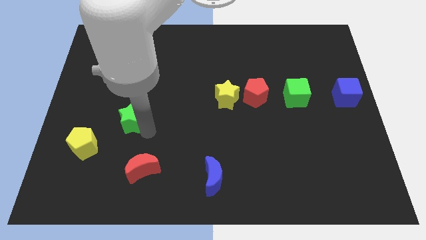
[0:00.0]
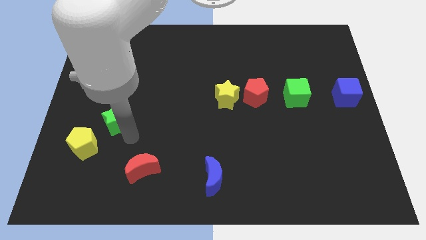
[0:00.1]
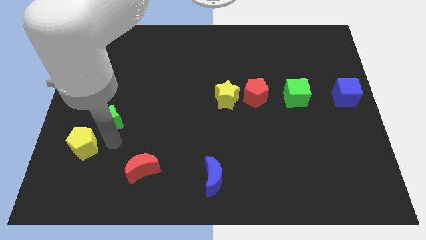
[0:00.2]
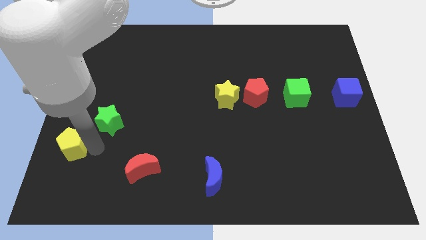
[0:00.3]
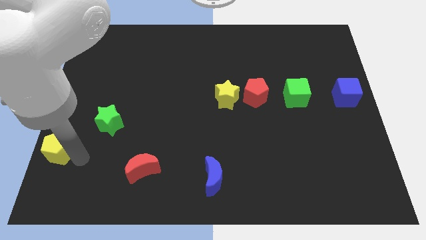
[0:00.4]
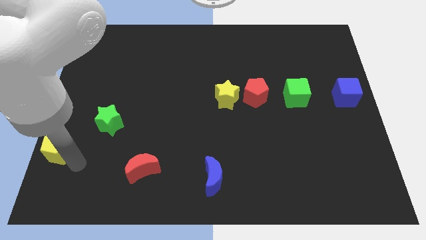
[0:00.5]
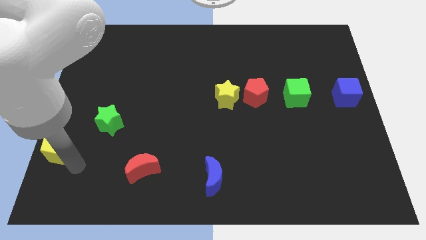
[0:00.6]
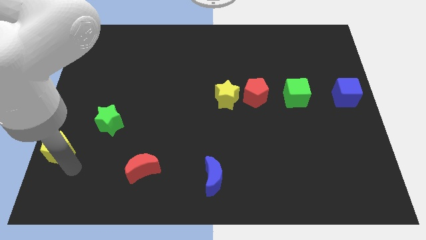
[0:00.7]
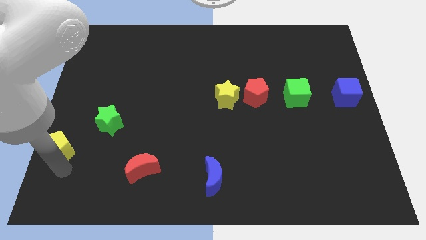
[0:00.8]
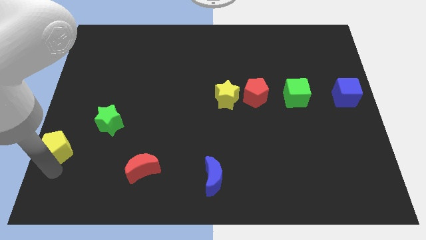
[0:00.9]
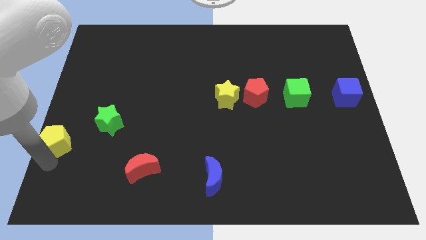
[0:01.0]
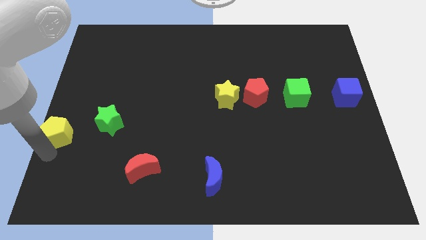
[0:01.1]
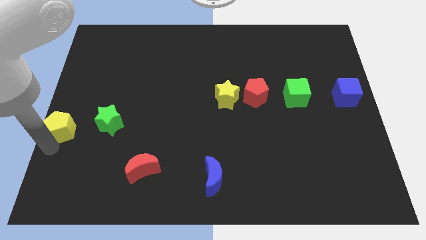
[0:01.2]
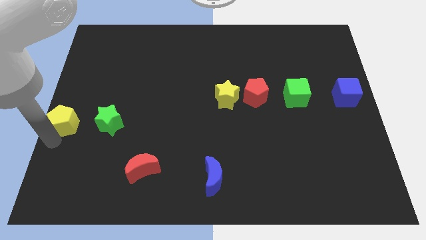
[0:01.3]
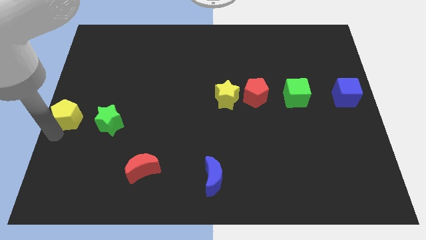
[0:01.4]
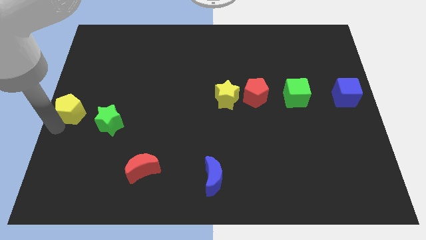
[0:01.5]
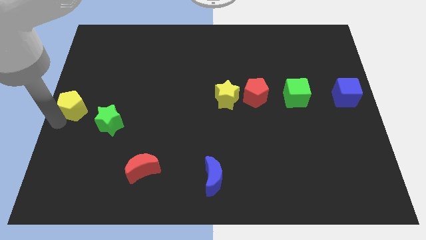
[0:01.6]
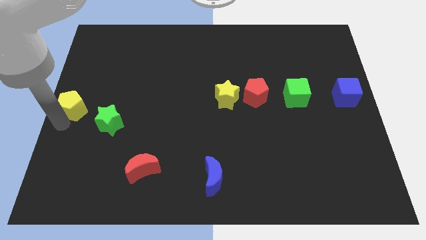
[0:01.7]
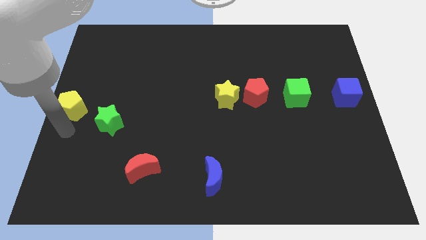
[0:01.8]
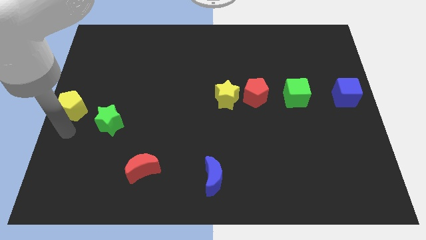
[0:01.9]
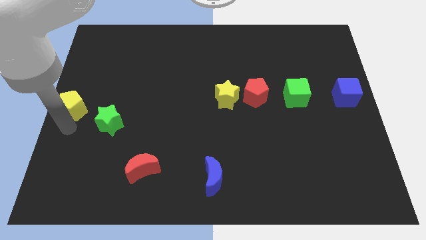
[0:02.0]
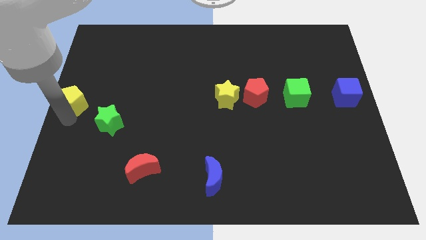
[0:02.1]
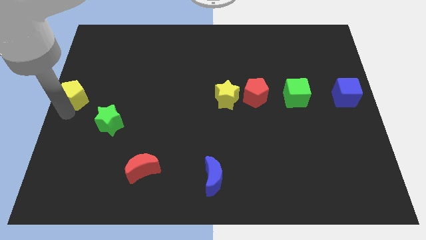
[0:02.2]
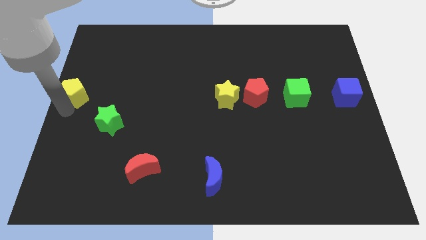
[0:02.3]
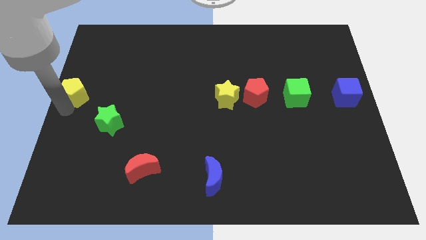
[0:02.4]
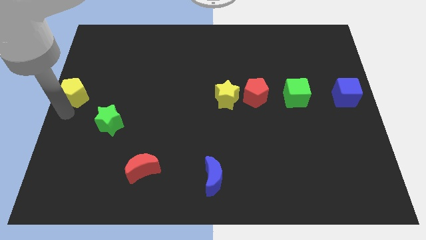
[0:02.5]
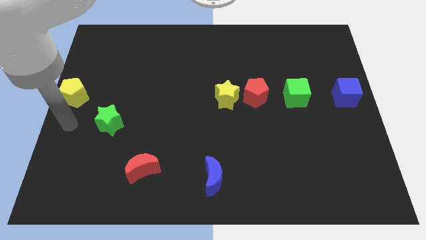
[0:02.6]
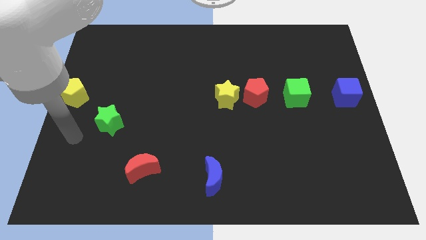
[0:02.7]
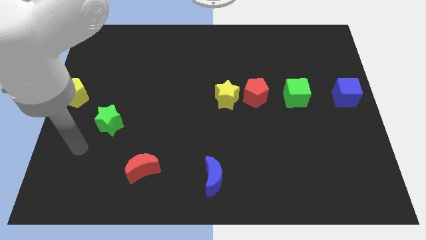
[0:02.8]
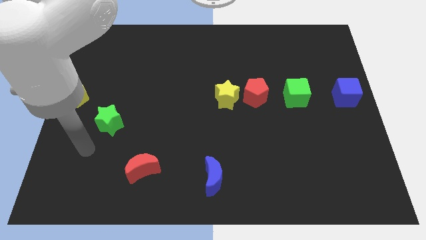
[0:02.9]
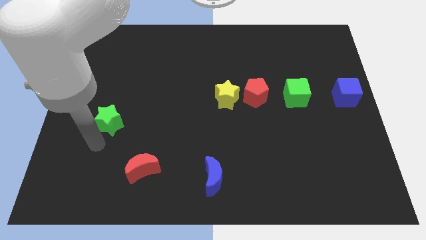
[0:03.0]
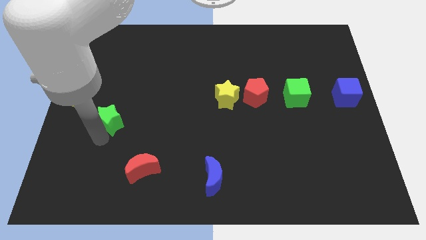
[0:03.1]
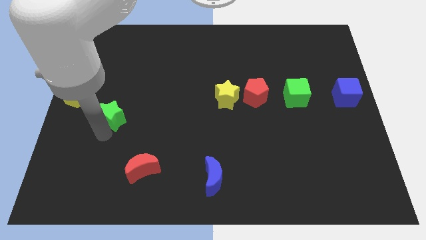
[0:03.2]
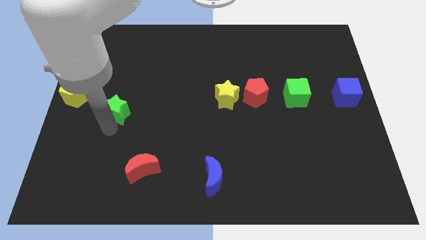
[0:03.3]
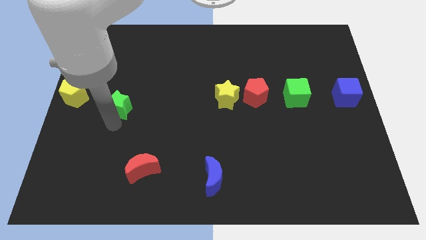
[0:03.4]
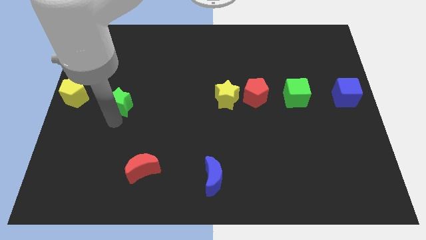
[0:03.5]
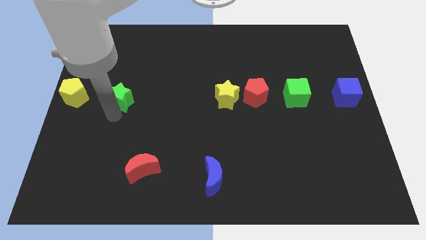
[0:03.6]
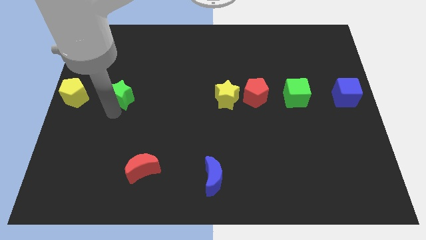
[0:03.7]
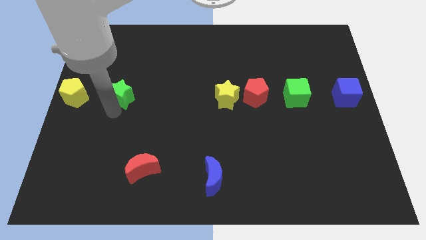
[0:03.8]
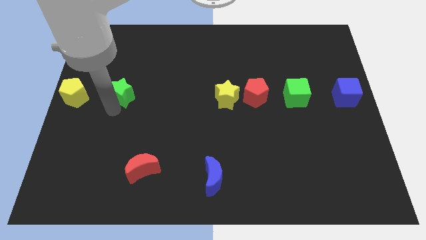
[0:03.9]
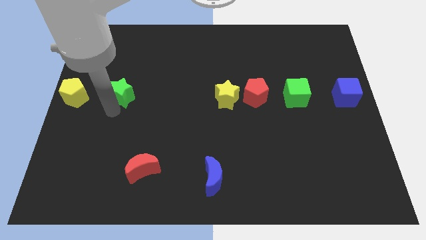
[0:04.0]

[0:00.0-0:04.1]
move yellow pentagon and green star towards left center

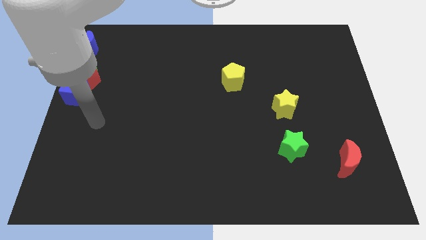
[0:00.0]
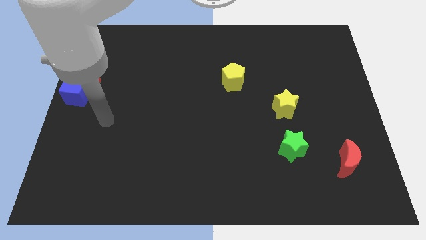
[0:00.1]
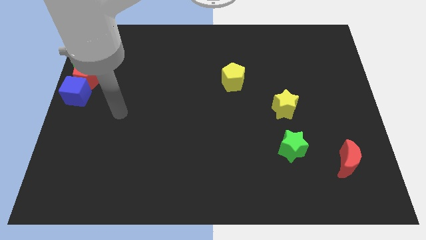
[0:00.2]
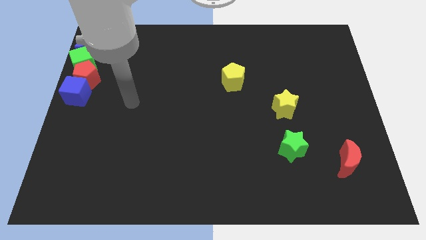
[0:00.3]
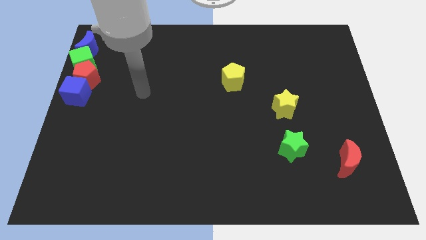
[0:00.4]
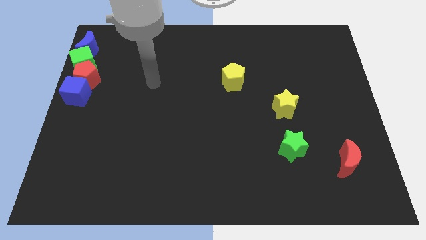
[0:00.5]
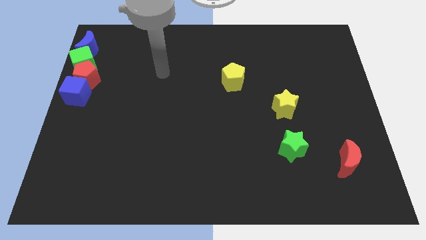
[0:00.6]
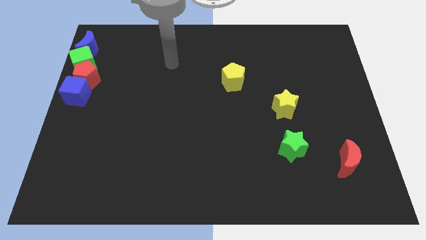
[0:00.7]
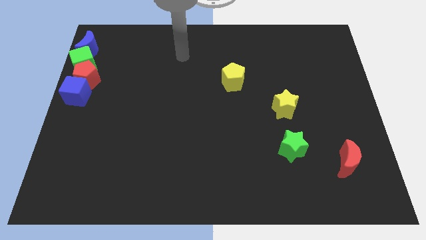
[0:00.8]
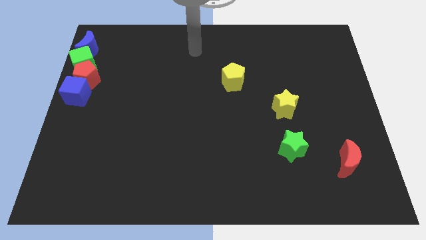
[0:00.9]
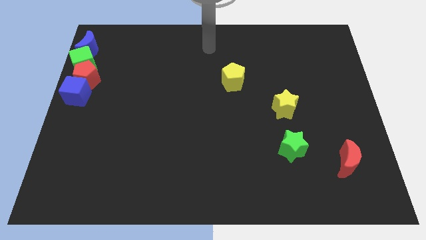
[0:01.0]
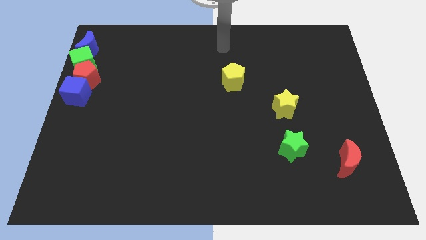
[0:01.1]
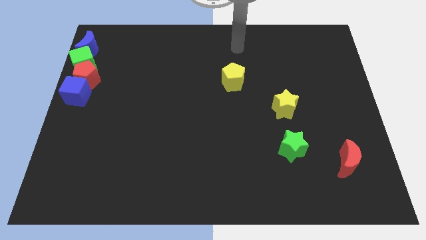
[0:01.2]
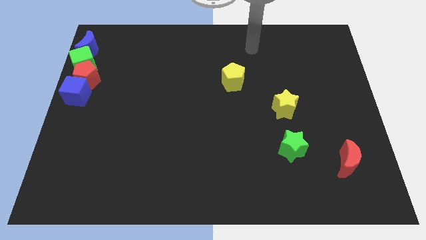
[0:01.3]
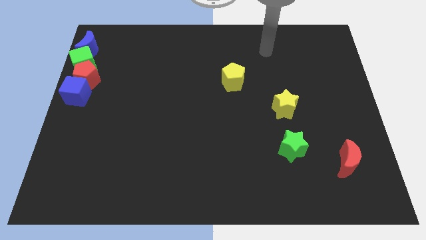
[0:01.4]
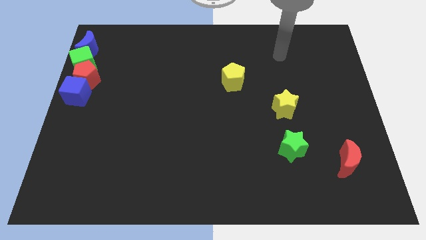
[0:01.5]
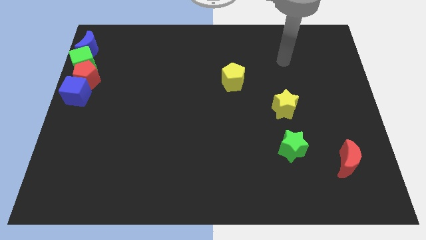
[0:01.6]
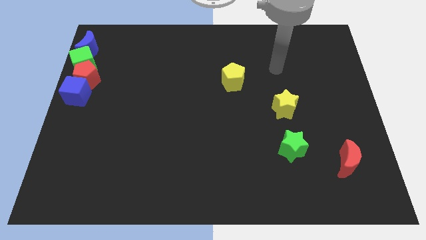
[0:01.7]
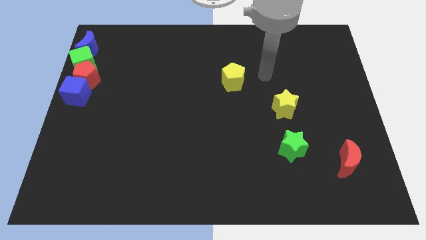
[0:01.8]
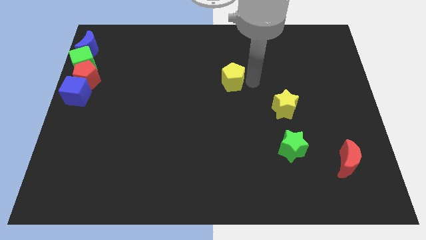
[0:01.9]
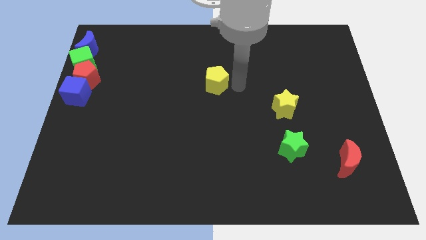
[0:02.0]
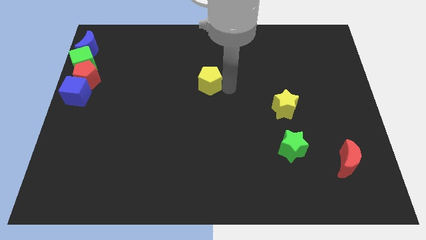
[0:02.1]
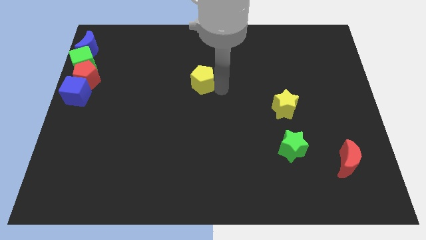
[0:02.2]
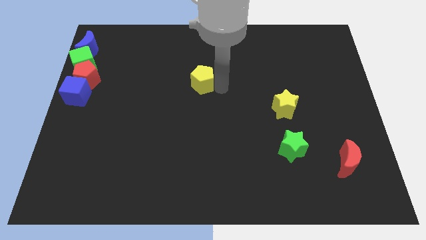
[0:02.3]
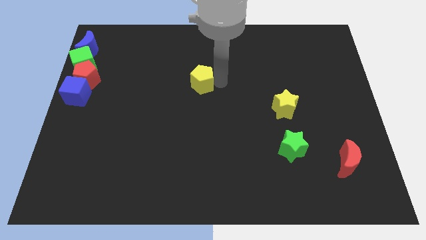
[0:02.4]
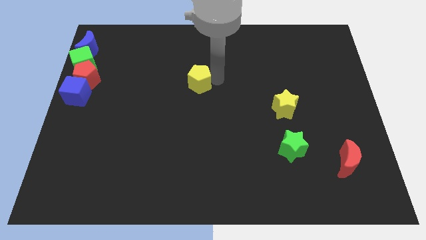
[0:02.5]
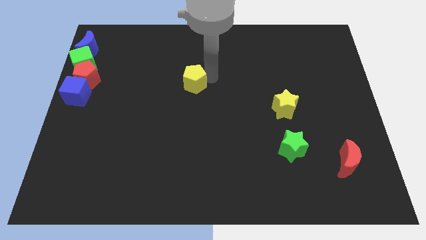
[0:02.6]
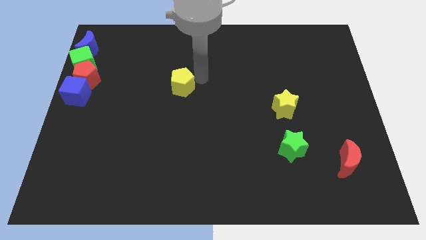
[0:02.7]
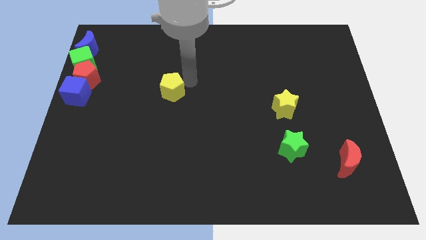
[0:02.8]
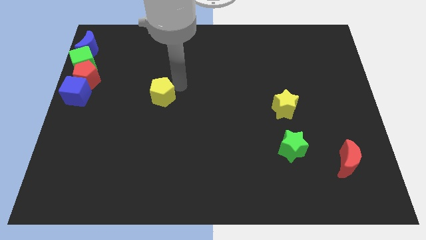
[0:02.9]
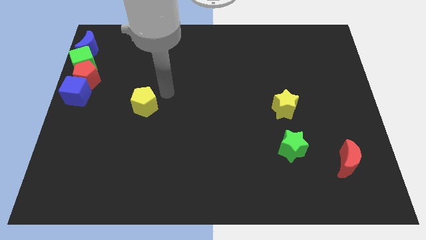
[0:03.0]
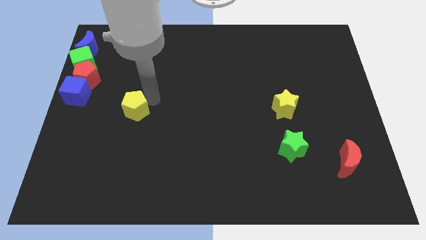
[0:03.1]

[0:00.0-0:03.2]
push the yellow pentagon to the right of the blue cube

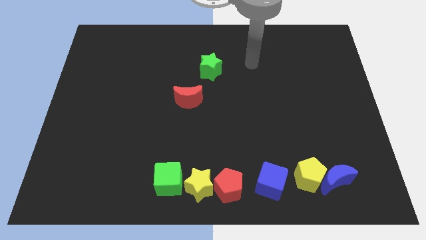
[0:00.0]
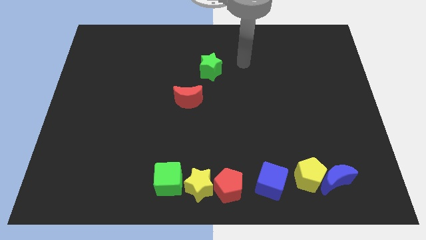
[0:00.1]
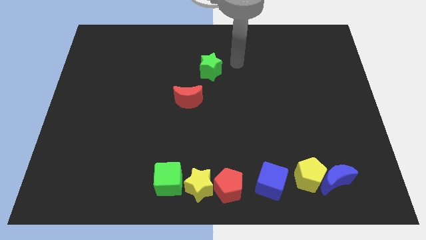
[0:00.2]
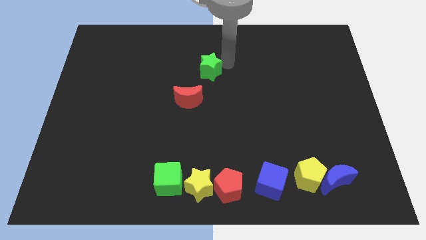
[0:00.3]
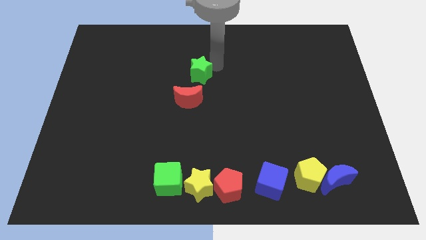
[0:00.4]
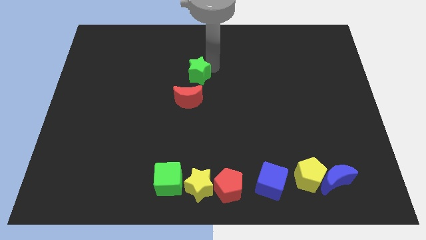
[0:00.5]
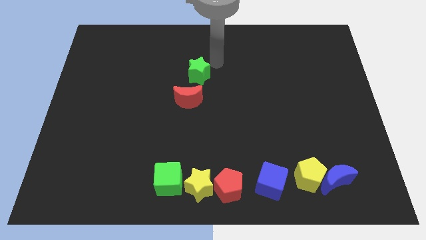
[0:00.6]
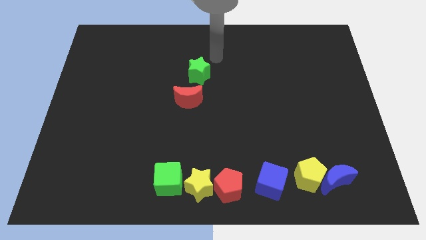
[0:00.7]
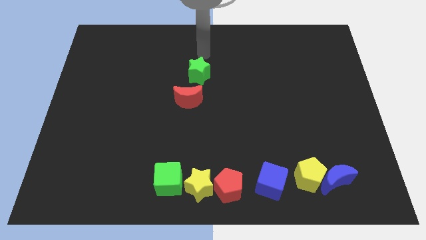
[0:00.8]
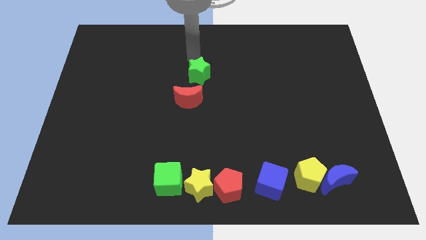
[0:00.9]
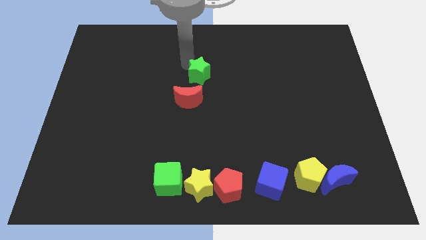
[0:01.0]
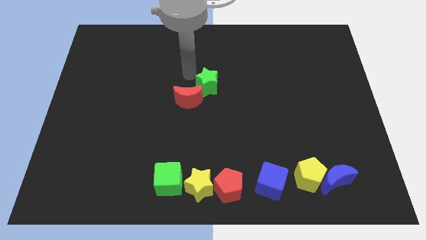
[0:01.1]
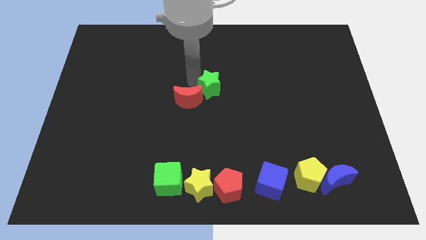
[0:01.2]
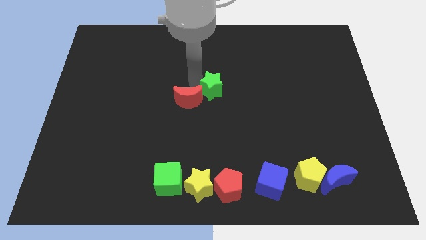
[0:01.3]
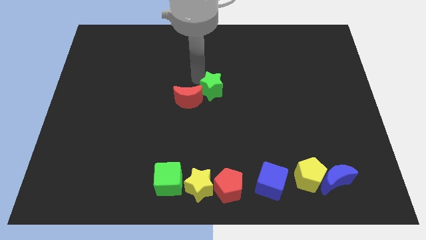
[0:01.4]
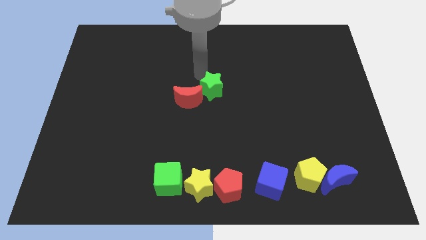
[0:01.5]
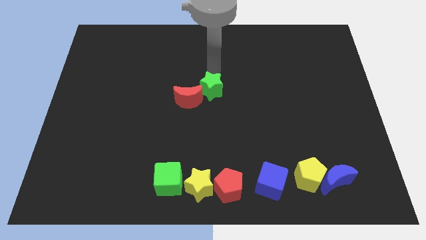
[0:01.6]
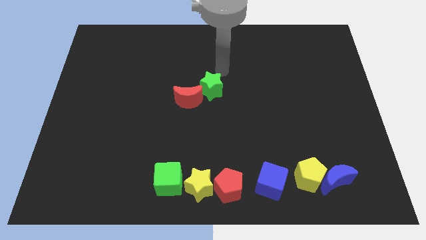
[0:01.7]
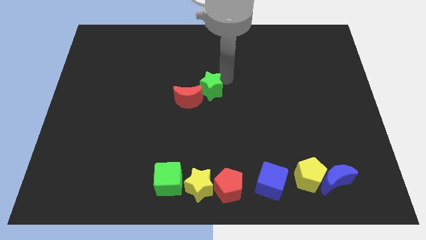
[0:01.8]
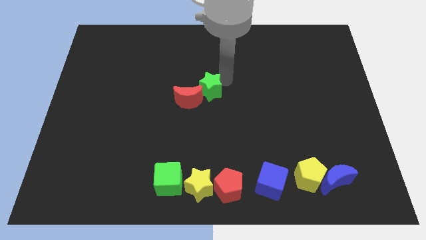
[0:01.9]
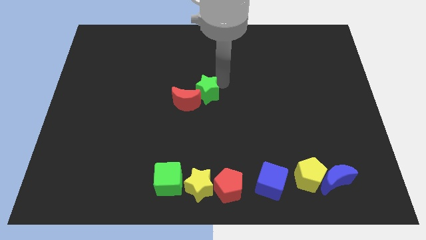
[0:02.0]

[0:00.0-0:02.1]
slide the green star to the top right of red crescent
